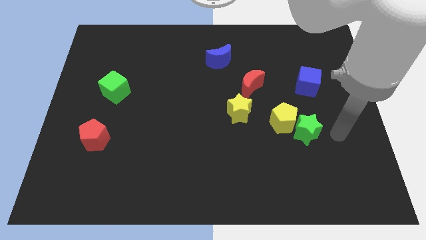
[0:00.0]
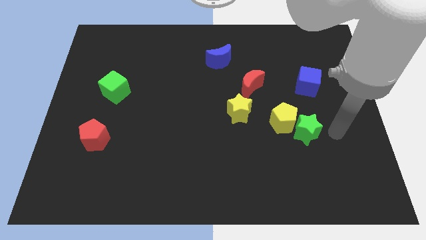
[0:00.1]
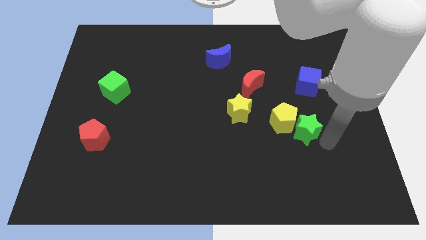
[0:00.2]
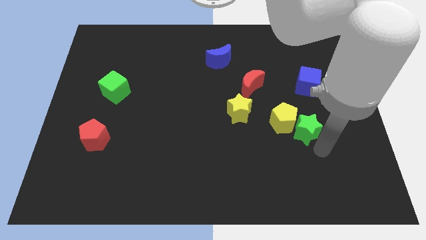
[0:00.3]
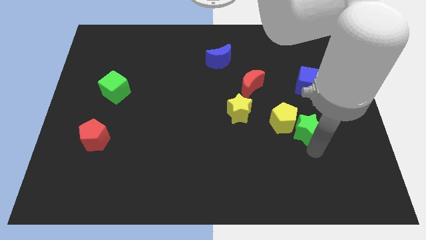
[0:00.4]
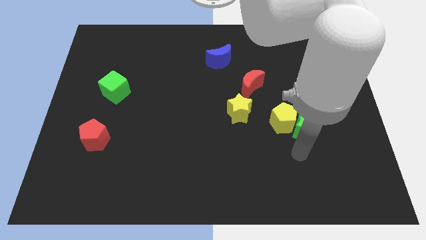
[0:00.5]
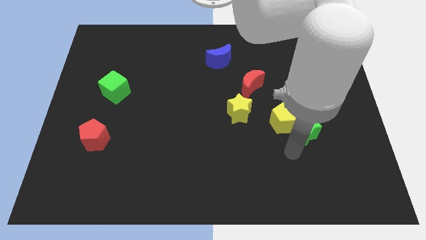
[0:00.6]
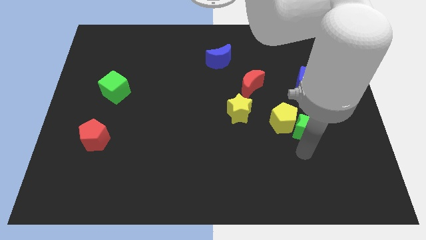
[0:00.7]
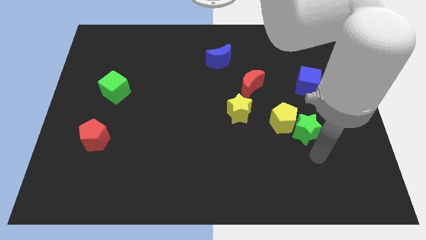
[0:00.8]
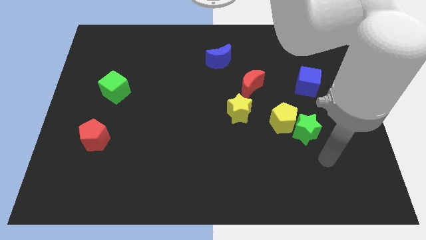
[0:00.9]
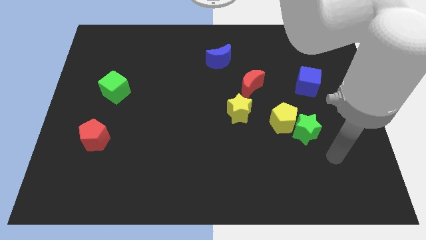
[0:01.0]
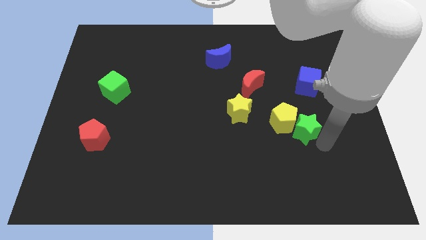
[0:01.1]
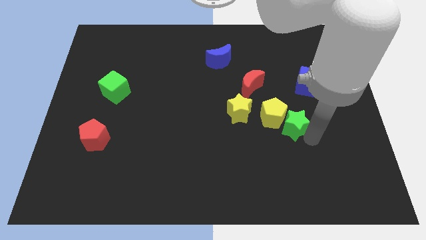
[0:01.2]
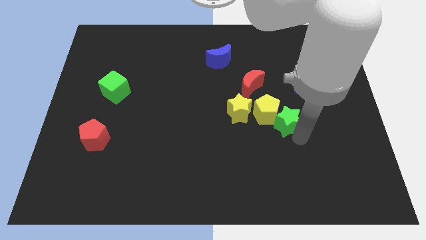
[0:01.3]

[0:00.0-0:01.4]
push the green star into the yellow pentagon

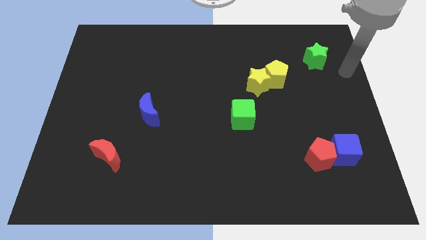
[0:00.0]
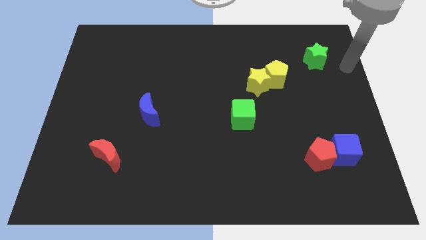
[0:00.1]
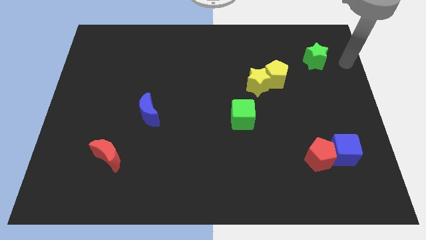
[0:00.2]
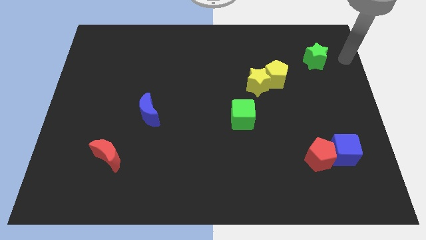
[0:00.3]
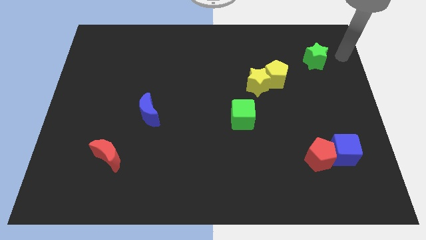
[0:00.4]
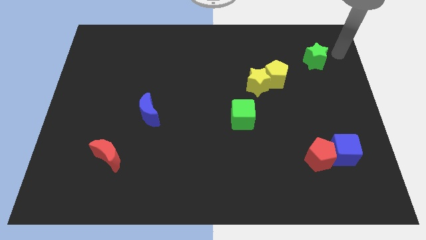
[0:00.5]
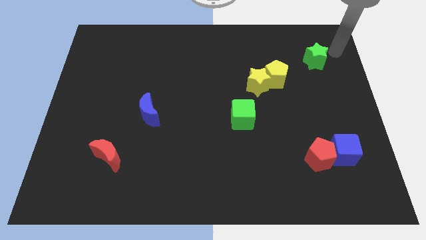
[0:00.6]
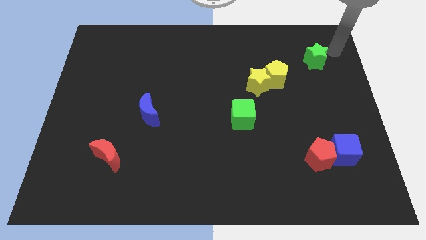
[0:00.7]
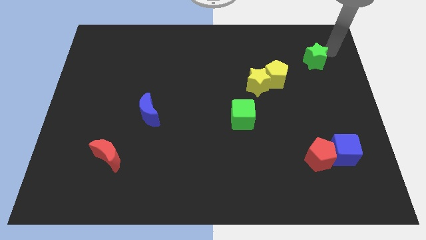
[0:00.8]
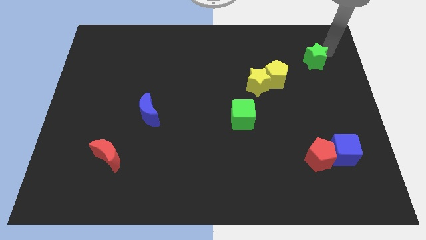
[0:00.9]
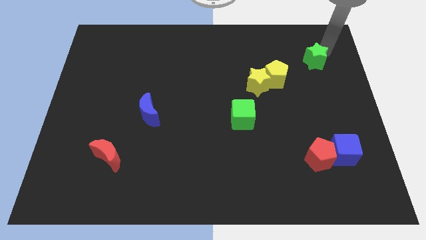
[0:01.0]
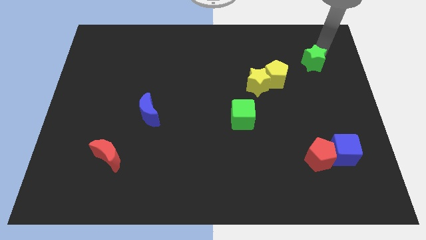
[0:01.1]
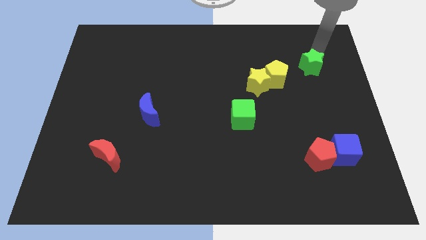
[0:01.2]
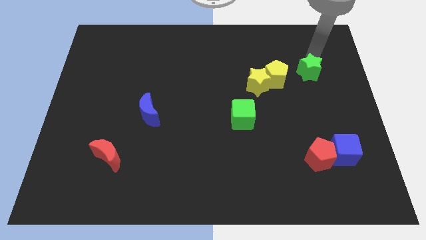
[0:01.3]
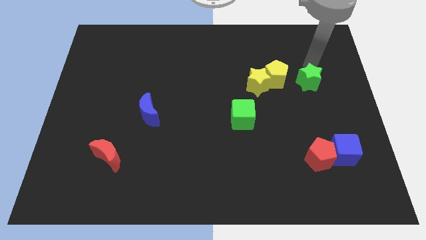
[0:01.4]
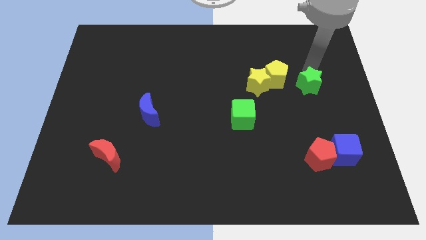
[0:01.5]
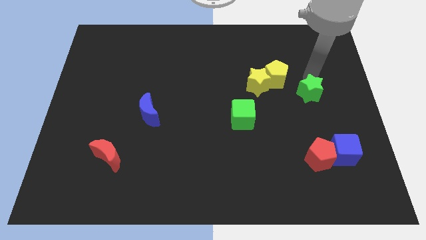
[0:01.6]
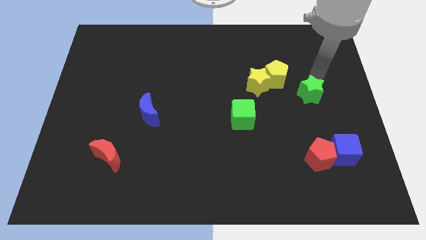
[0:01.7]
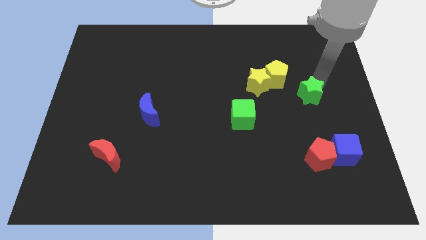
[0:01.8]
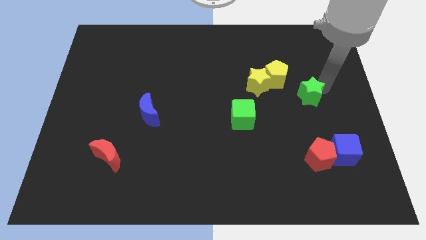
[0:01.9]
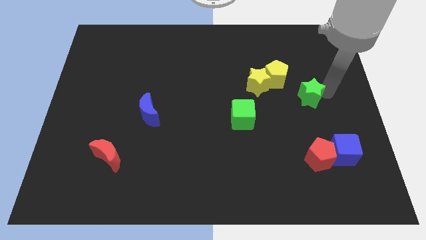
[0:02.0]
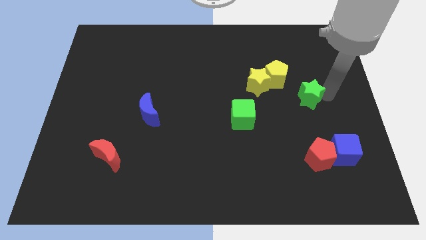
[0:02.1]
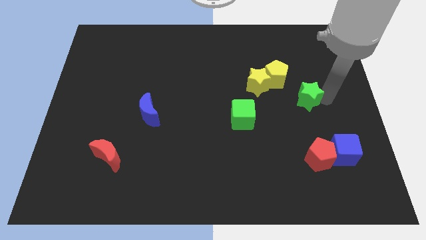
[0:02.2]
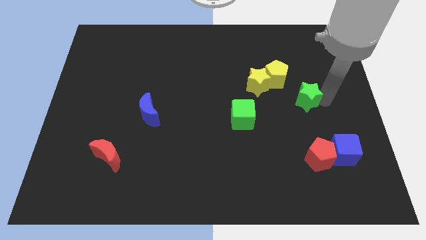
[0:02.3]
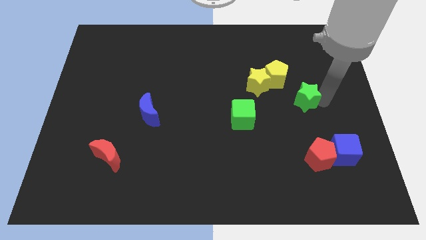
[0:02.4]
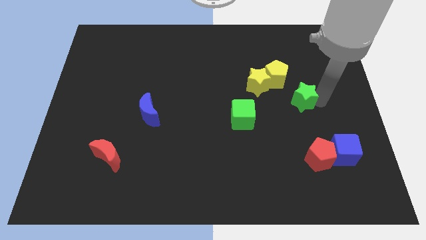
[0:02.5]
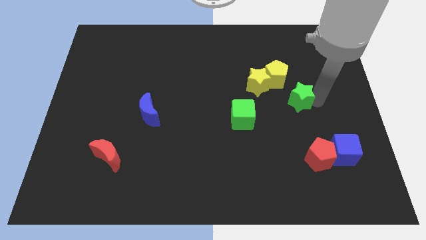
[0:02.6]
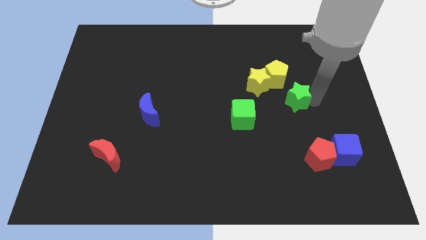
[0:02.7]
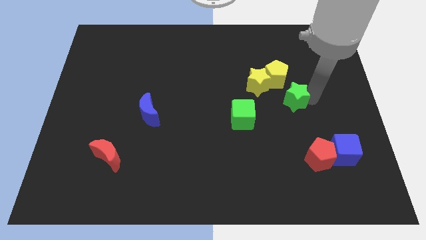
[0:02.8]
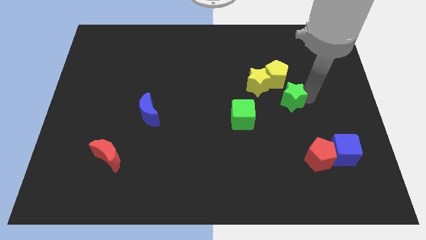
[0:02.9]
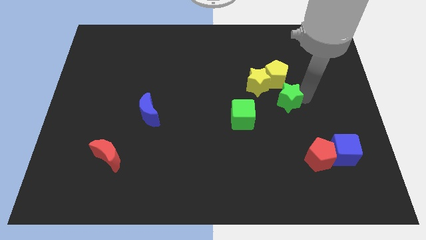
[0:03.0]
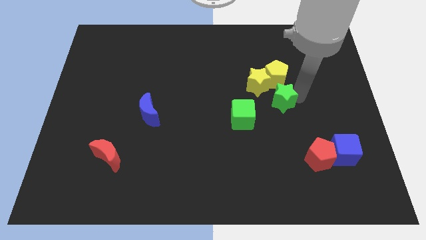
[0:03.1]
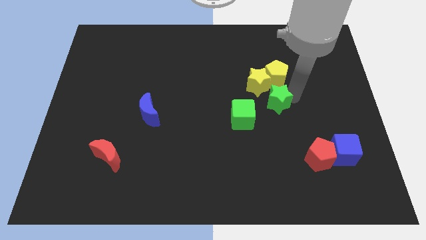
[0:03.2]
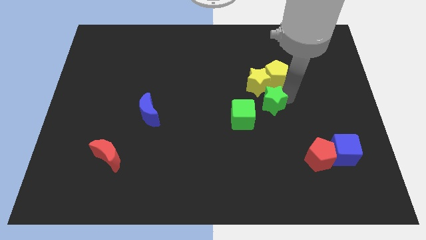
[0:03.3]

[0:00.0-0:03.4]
move the green star below the yellow blocks

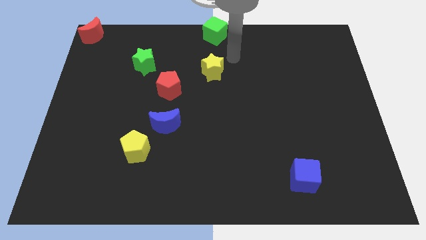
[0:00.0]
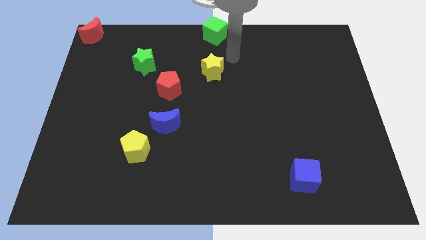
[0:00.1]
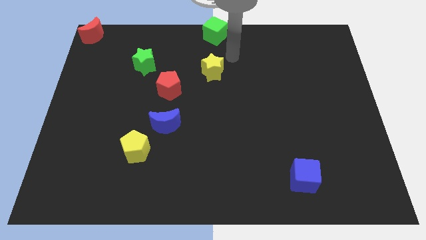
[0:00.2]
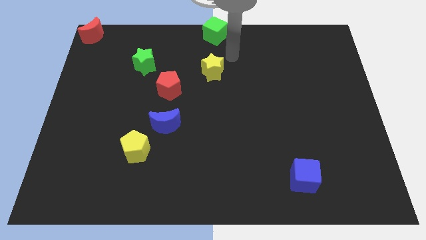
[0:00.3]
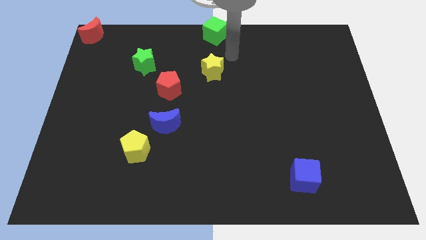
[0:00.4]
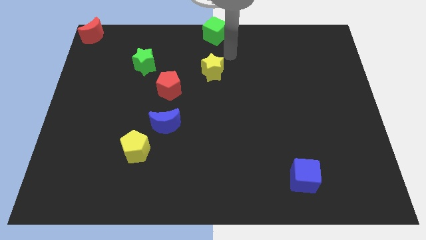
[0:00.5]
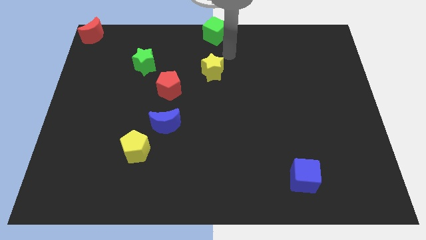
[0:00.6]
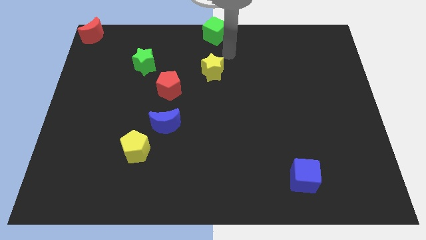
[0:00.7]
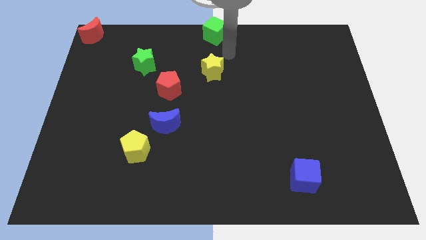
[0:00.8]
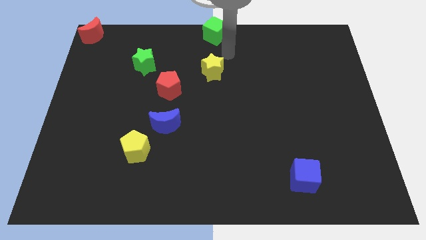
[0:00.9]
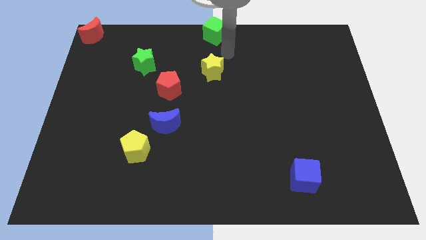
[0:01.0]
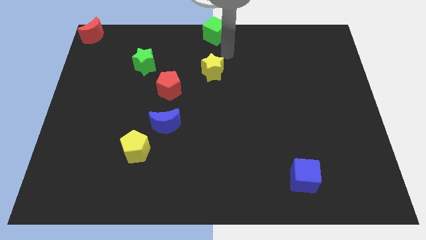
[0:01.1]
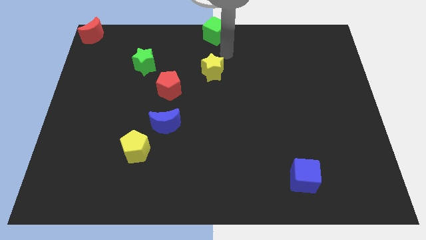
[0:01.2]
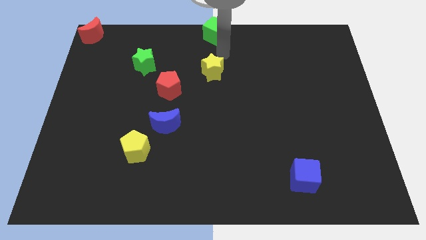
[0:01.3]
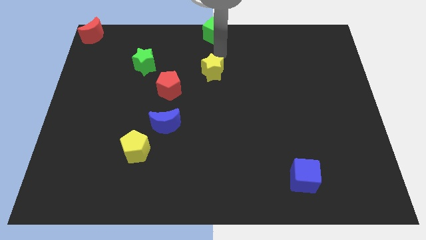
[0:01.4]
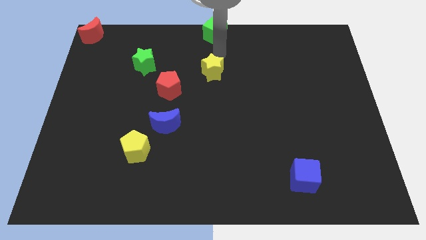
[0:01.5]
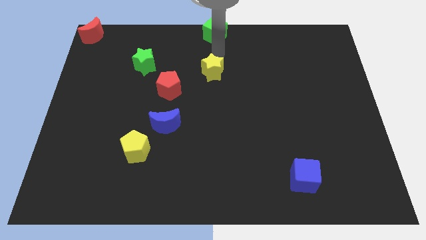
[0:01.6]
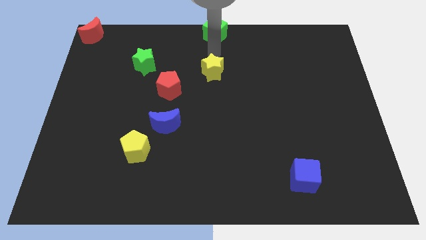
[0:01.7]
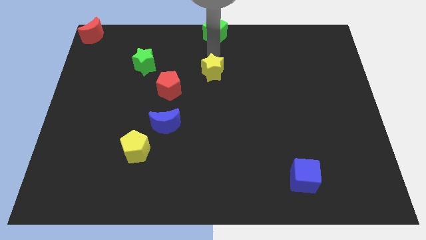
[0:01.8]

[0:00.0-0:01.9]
place your arm in between the green cube and yellow star

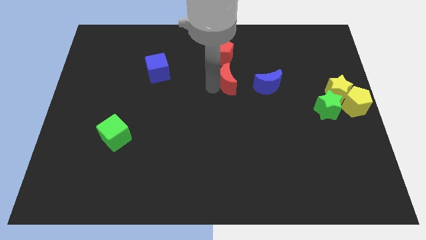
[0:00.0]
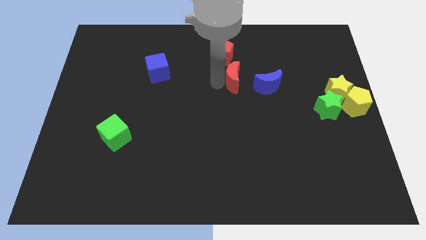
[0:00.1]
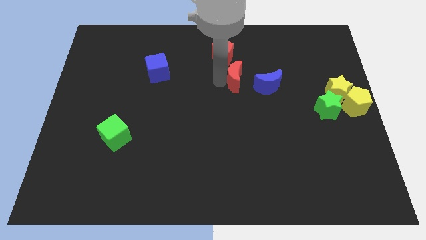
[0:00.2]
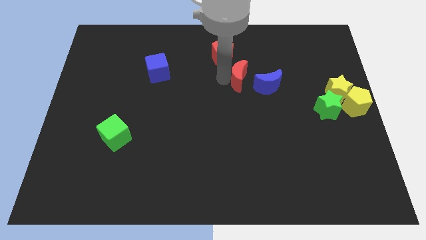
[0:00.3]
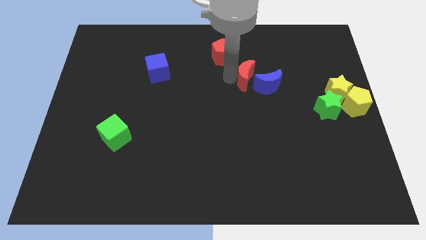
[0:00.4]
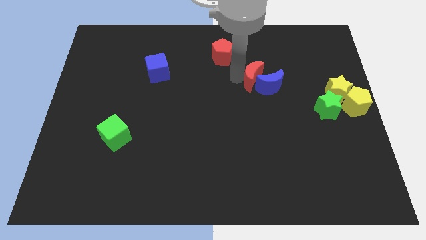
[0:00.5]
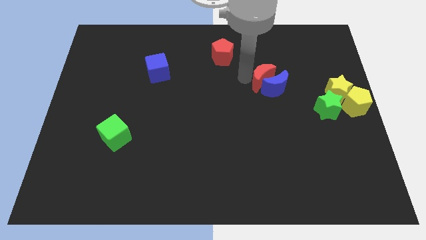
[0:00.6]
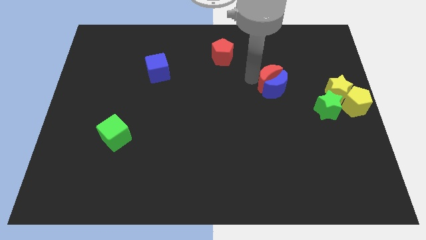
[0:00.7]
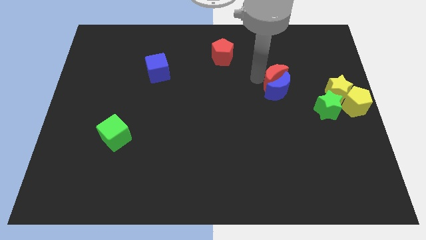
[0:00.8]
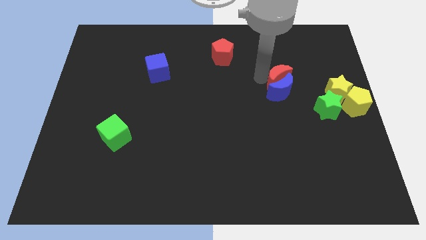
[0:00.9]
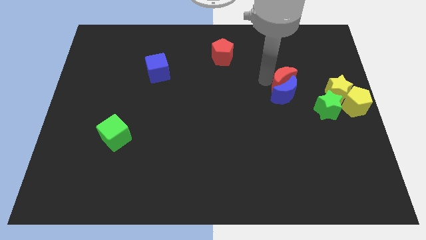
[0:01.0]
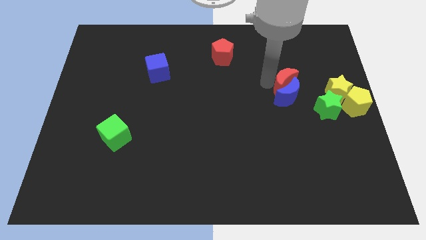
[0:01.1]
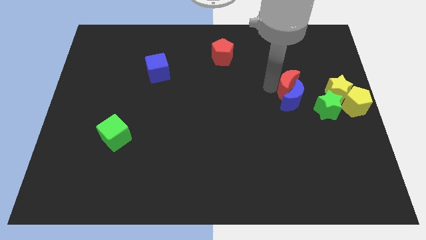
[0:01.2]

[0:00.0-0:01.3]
push the red moon into the blue moon

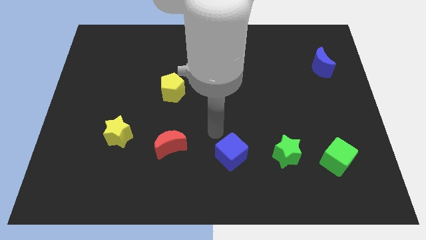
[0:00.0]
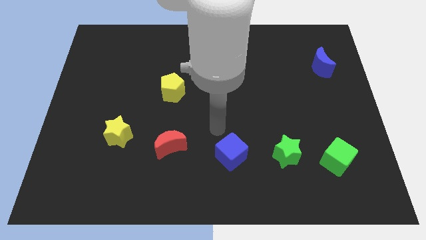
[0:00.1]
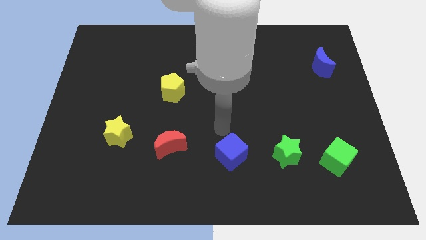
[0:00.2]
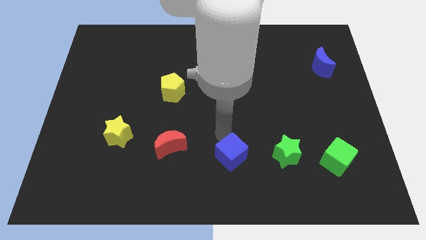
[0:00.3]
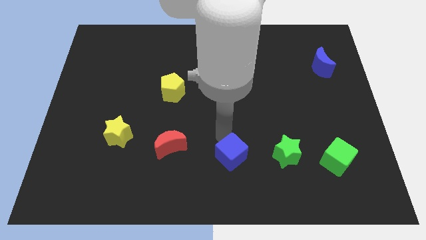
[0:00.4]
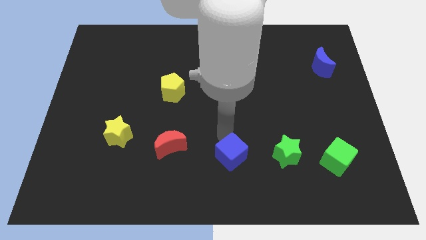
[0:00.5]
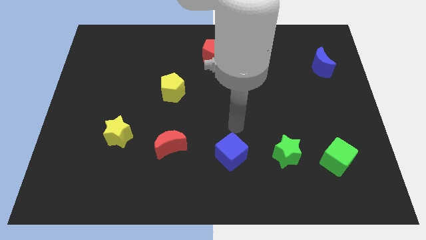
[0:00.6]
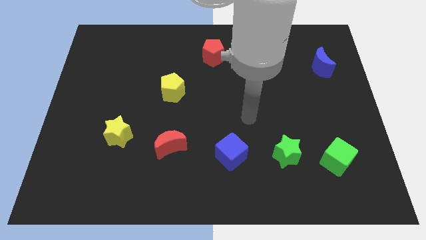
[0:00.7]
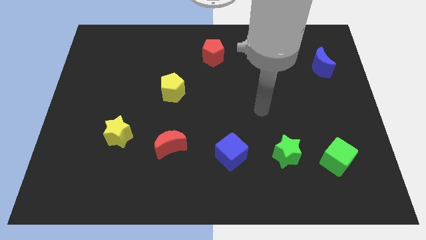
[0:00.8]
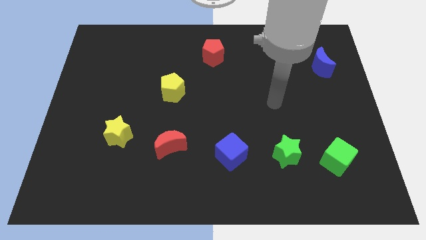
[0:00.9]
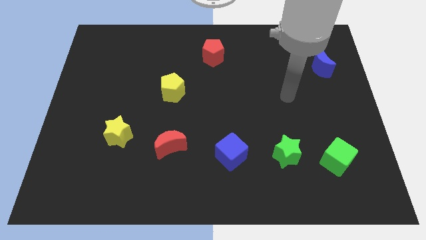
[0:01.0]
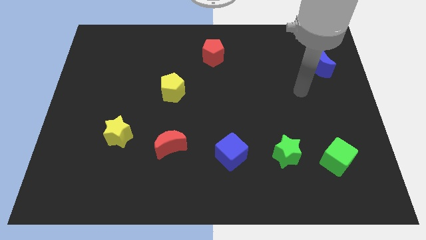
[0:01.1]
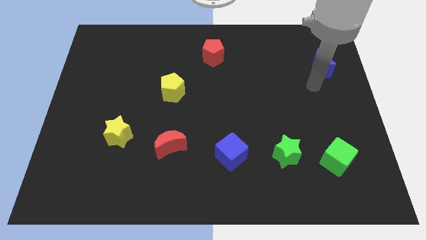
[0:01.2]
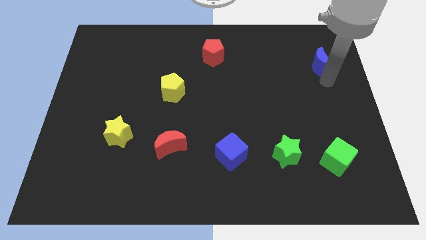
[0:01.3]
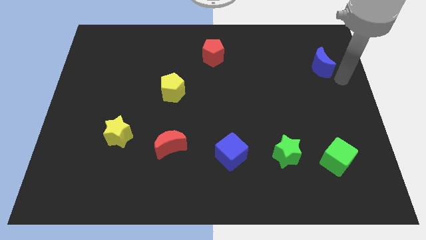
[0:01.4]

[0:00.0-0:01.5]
place your hand at the bottom of the blue crescent
